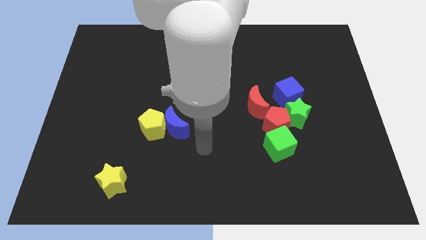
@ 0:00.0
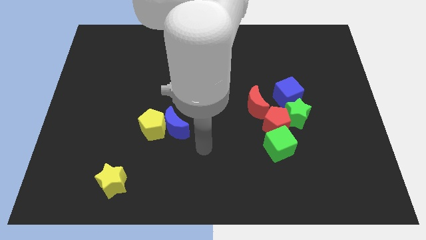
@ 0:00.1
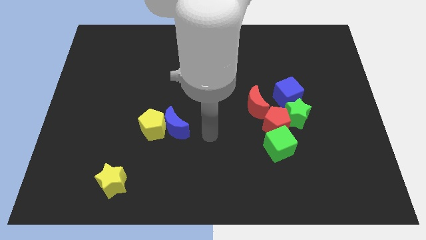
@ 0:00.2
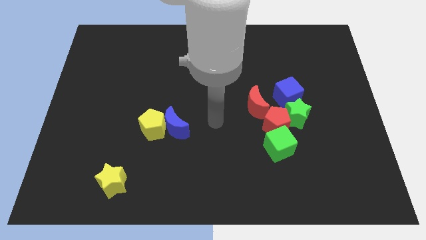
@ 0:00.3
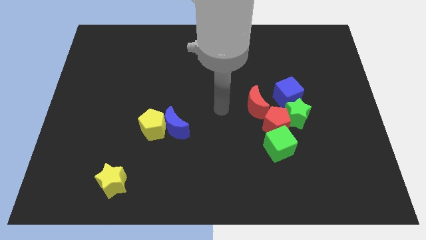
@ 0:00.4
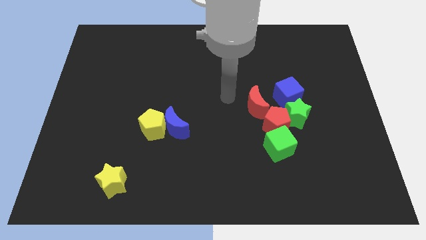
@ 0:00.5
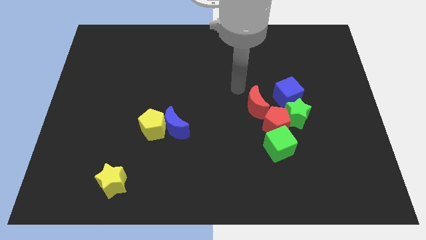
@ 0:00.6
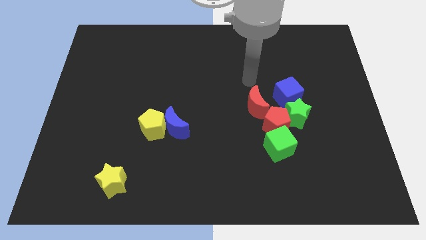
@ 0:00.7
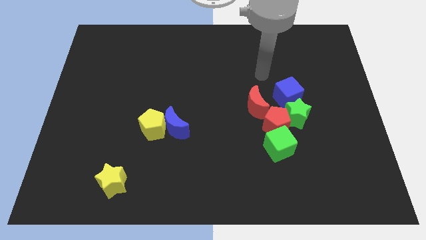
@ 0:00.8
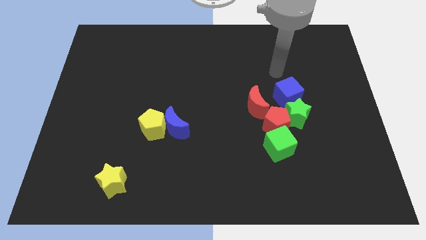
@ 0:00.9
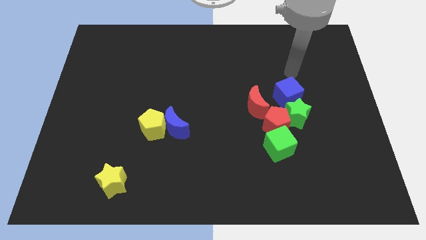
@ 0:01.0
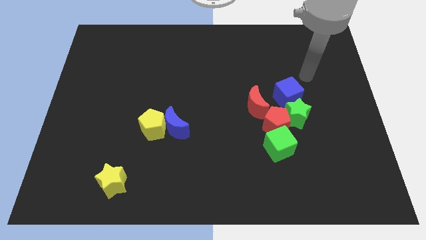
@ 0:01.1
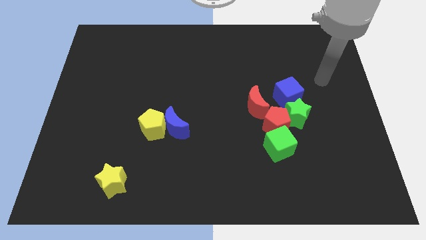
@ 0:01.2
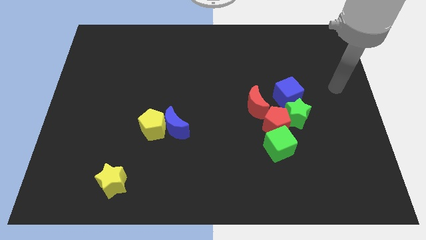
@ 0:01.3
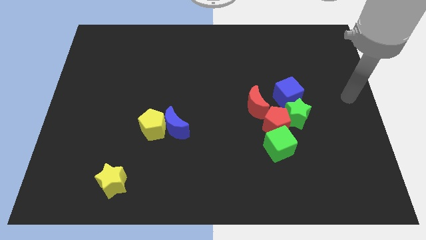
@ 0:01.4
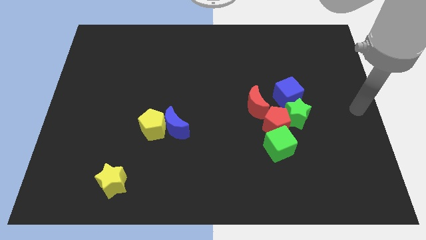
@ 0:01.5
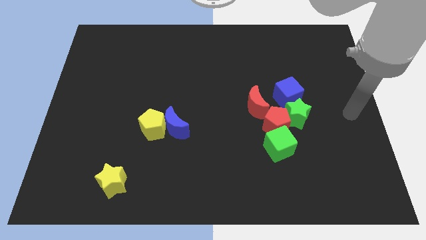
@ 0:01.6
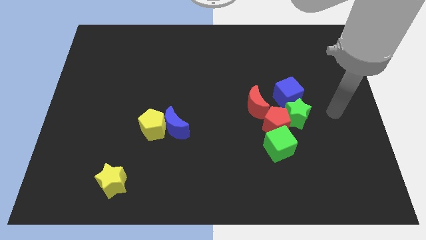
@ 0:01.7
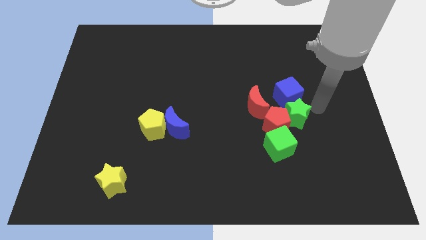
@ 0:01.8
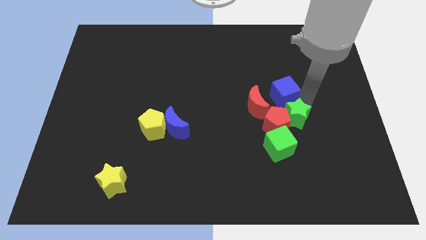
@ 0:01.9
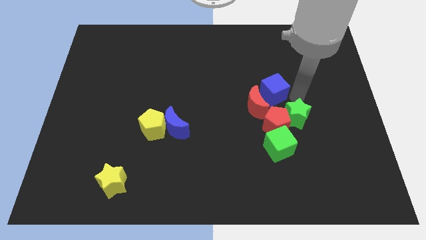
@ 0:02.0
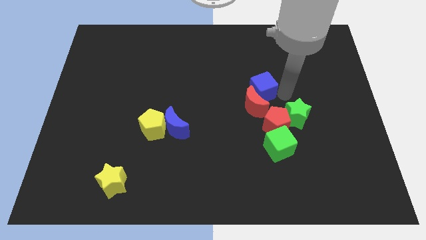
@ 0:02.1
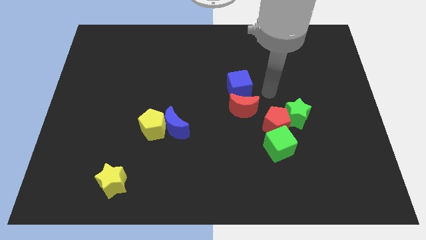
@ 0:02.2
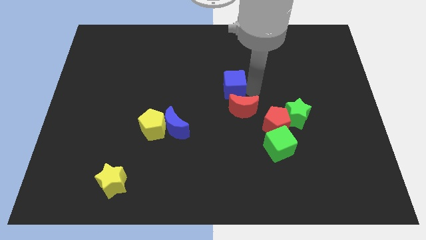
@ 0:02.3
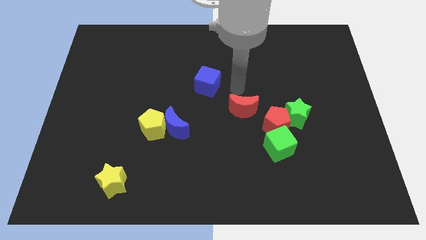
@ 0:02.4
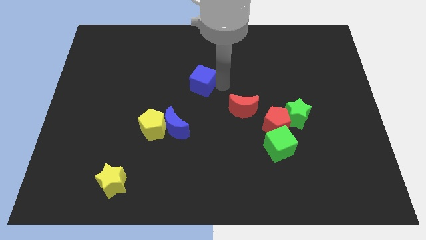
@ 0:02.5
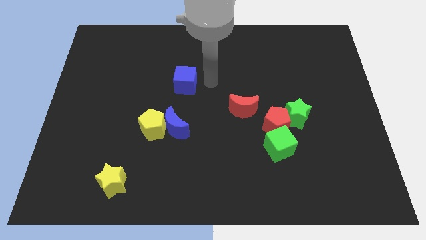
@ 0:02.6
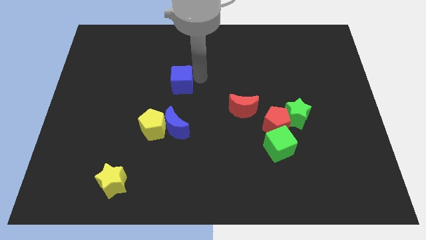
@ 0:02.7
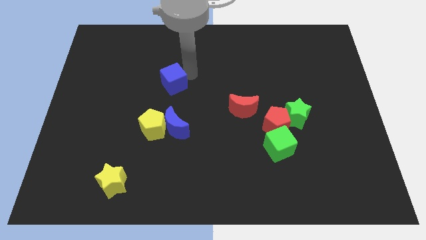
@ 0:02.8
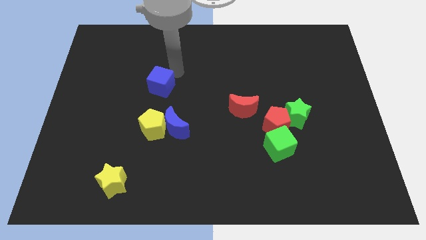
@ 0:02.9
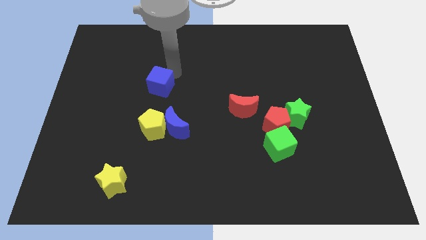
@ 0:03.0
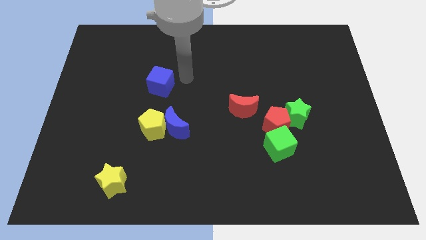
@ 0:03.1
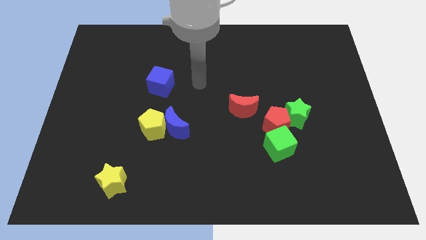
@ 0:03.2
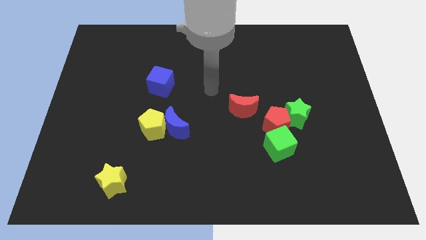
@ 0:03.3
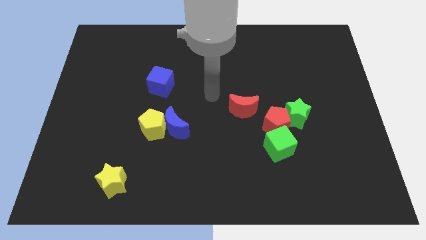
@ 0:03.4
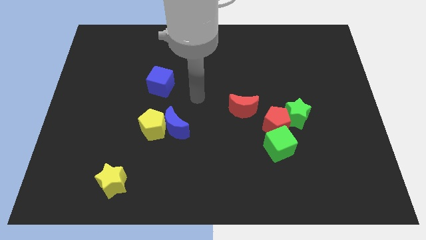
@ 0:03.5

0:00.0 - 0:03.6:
push the blue cube to the vertical top side of the yellow pentagon

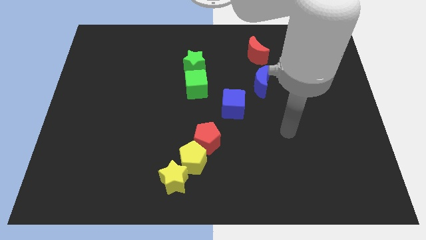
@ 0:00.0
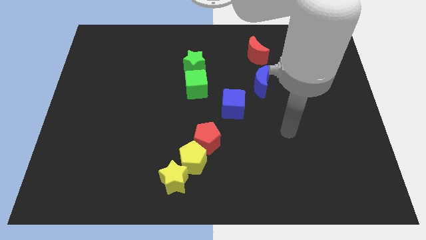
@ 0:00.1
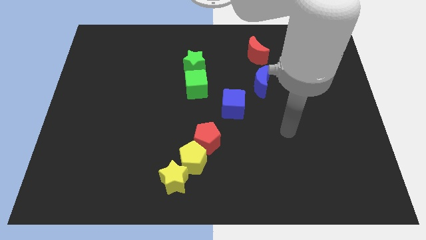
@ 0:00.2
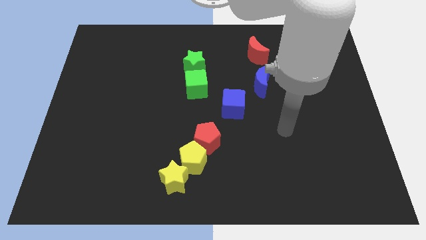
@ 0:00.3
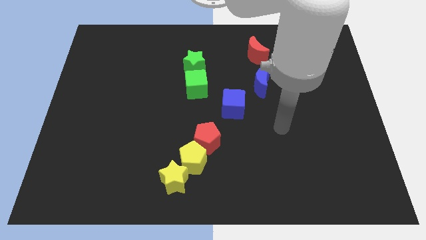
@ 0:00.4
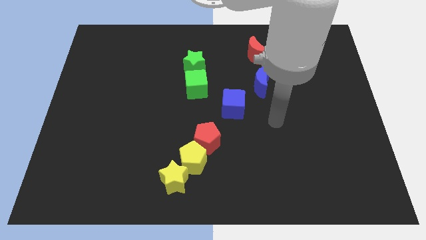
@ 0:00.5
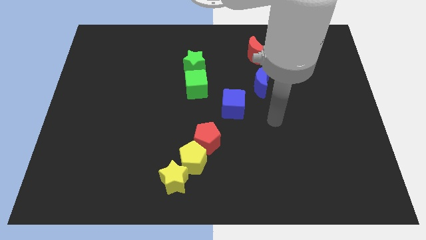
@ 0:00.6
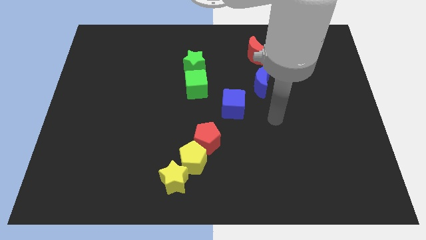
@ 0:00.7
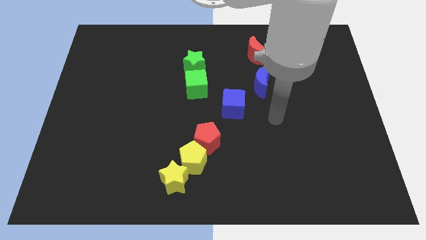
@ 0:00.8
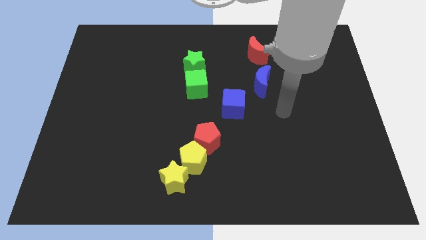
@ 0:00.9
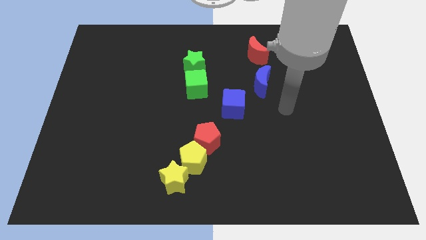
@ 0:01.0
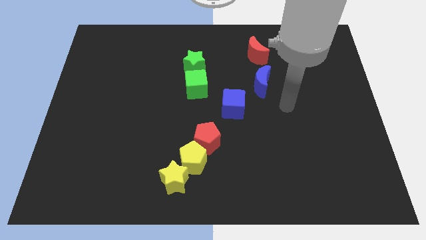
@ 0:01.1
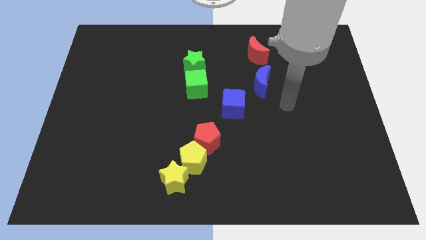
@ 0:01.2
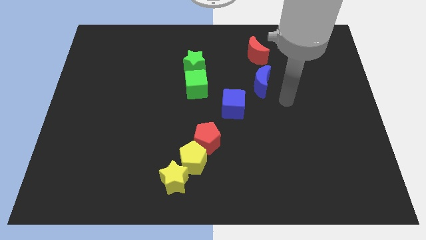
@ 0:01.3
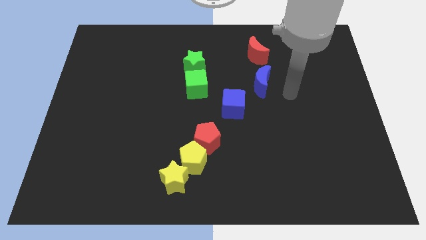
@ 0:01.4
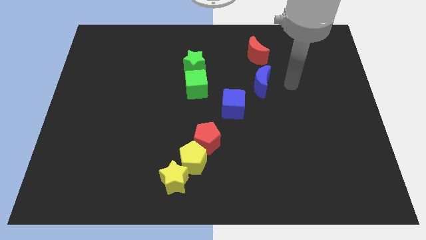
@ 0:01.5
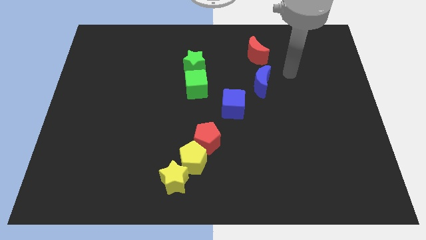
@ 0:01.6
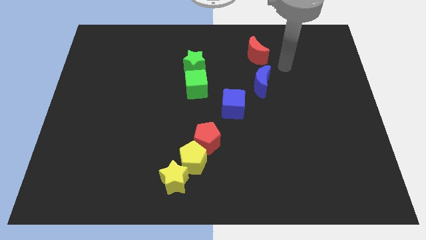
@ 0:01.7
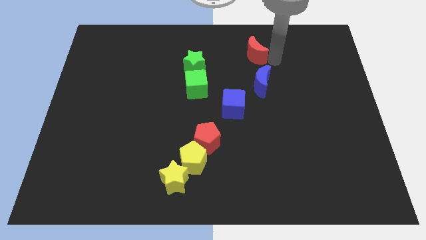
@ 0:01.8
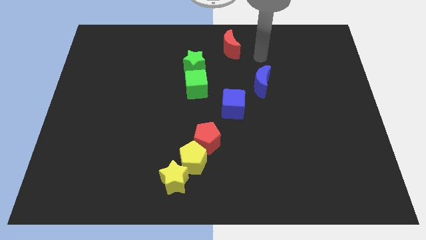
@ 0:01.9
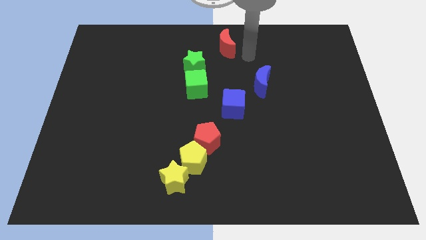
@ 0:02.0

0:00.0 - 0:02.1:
slide red moon towards the top center

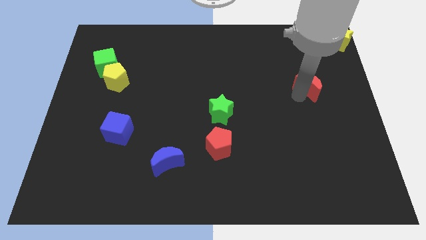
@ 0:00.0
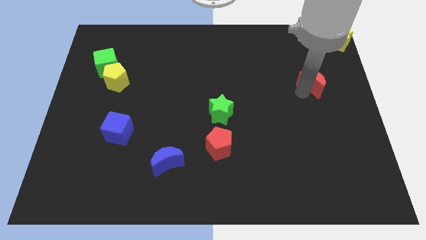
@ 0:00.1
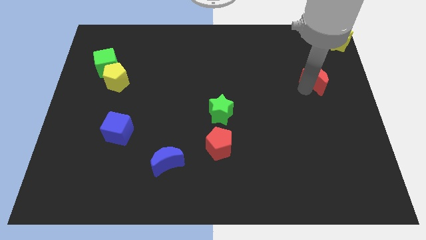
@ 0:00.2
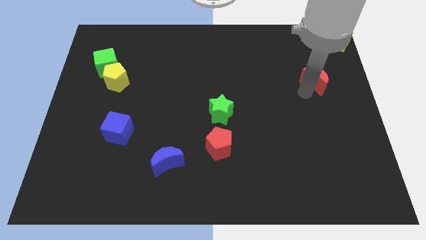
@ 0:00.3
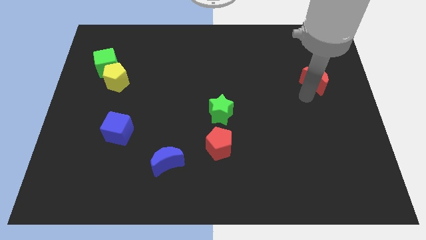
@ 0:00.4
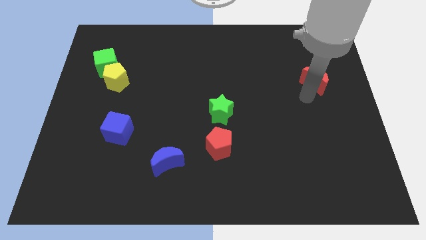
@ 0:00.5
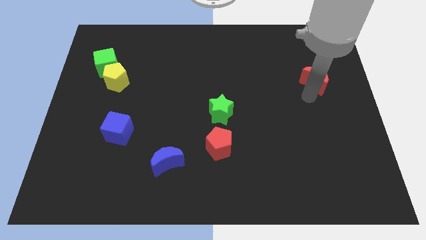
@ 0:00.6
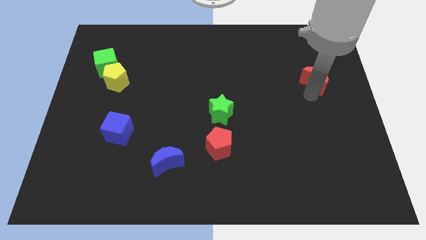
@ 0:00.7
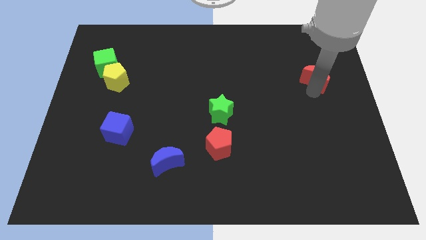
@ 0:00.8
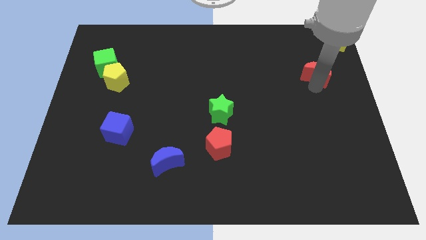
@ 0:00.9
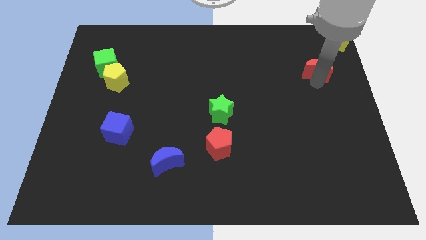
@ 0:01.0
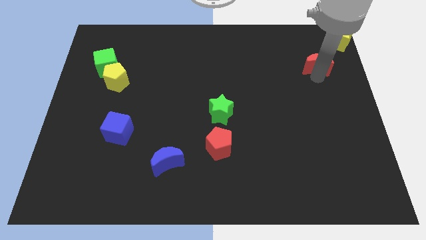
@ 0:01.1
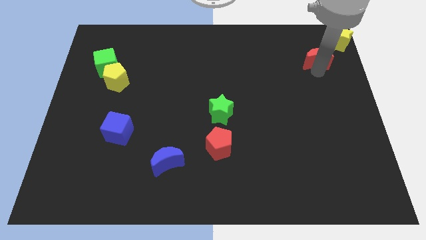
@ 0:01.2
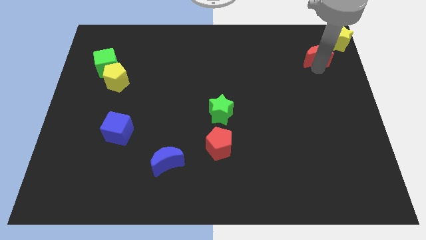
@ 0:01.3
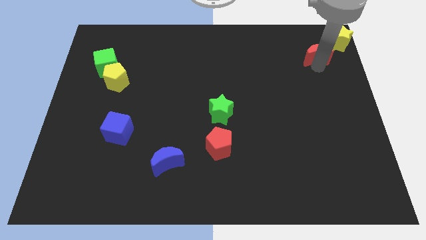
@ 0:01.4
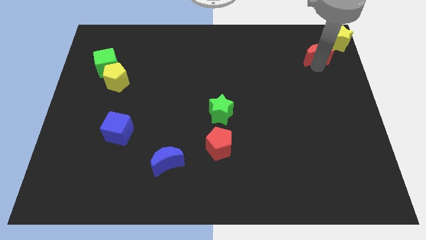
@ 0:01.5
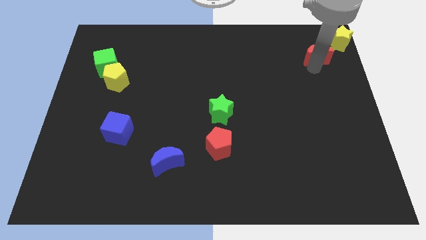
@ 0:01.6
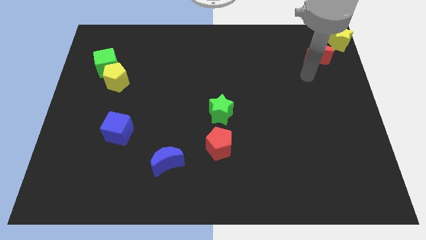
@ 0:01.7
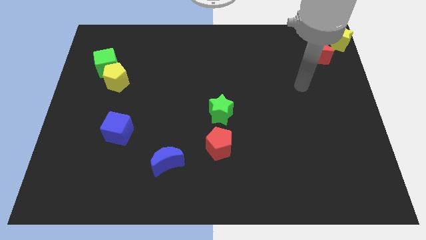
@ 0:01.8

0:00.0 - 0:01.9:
move the red moon towards the yellow star

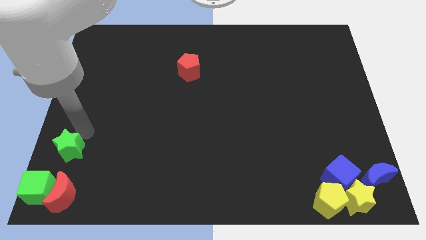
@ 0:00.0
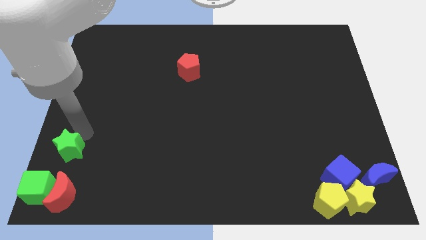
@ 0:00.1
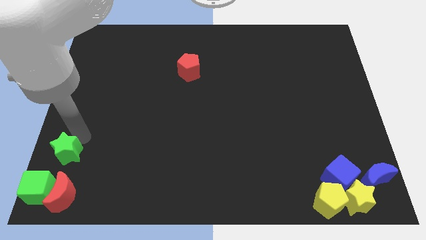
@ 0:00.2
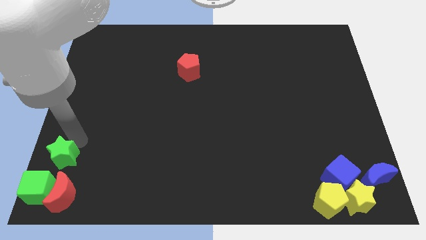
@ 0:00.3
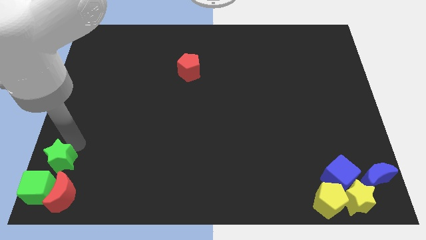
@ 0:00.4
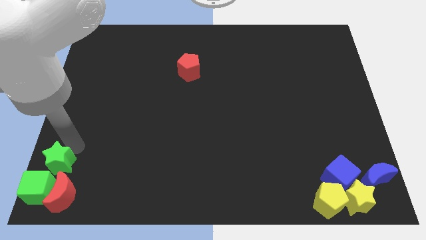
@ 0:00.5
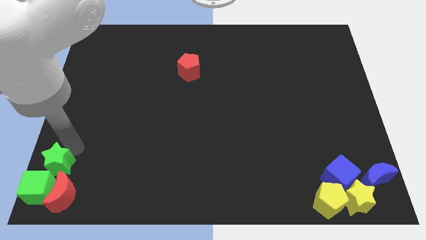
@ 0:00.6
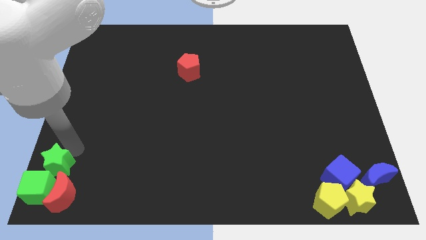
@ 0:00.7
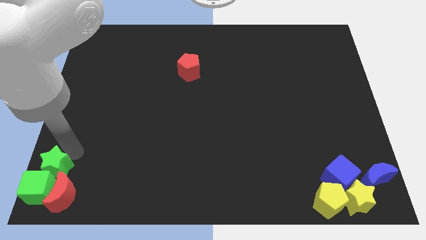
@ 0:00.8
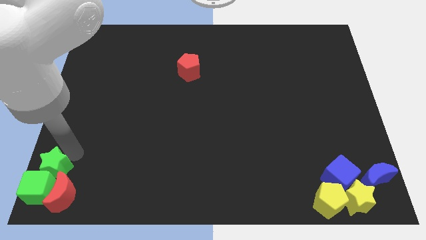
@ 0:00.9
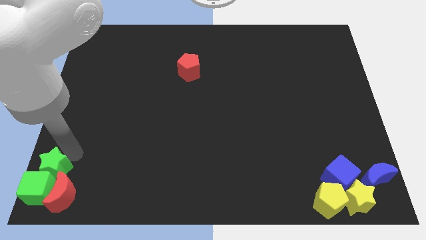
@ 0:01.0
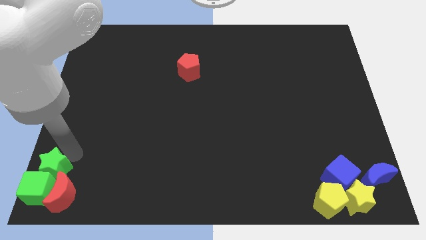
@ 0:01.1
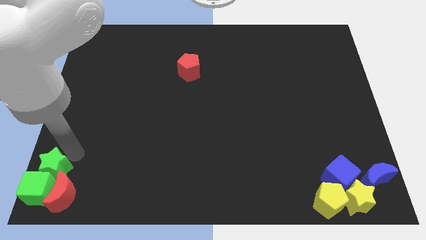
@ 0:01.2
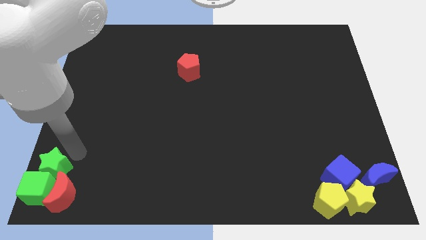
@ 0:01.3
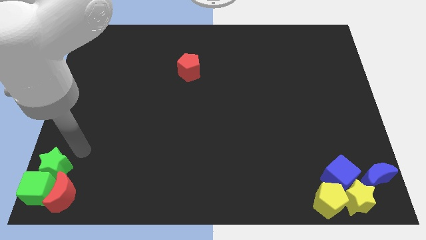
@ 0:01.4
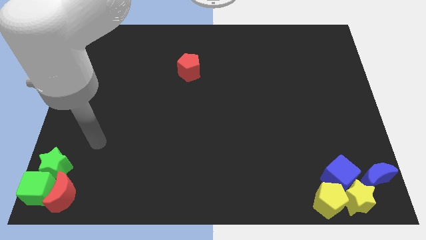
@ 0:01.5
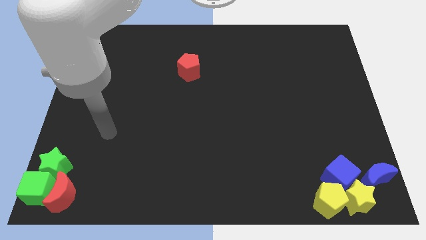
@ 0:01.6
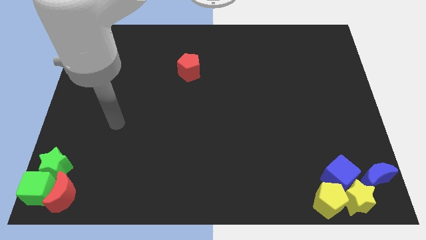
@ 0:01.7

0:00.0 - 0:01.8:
group up the green blocks at the bottom left corner of the board
